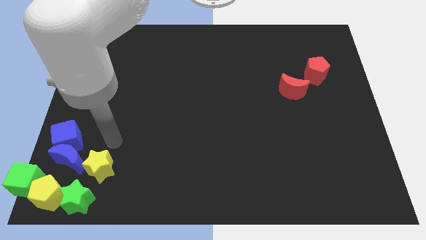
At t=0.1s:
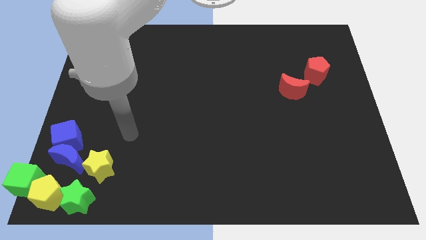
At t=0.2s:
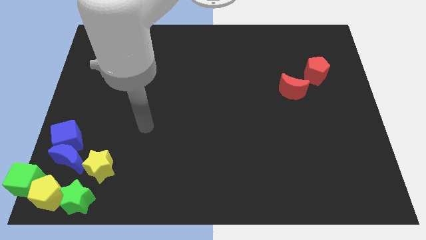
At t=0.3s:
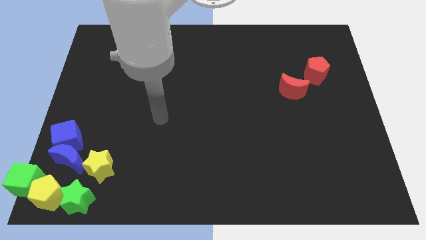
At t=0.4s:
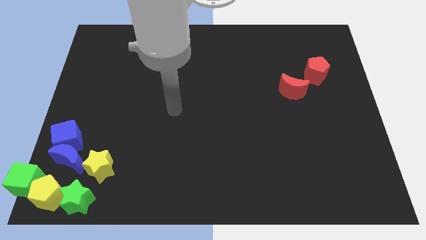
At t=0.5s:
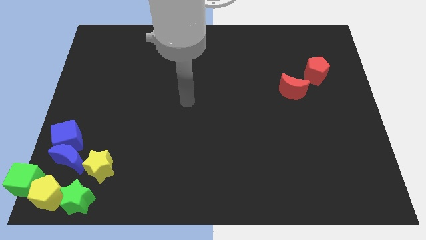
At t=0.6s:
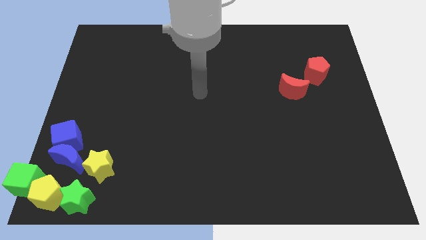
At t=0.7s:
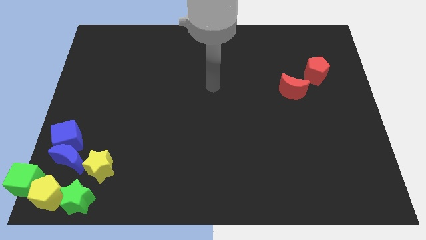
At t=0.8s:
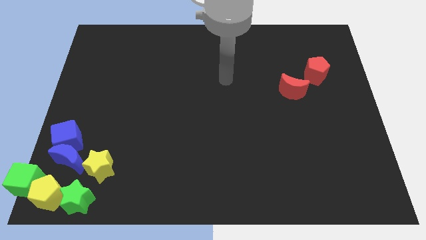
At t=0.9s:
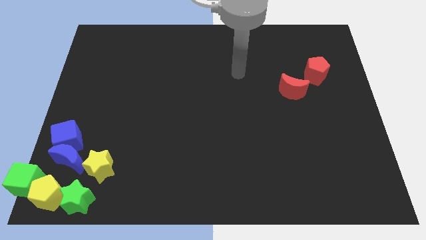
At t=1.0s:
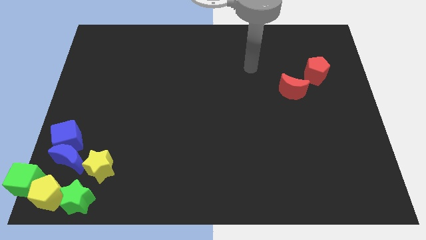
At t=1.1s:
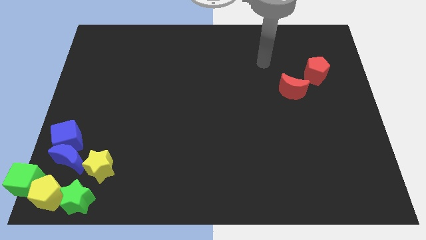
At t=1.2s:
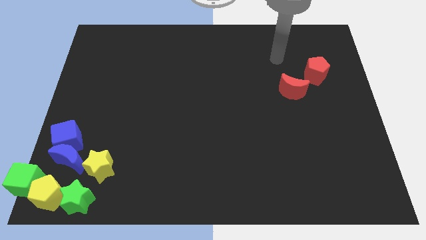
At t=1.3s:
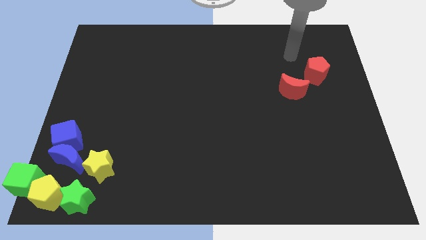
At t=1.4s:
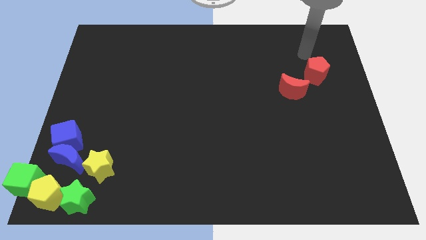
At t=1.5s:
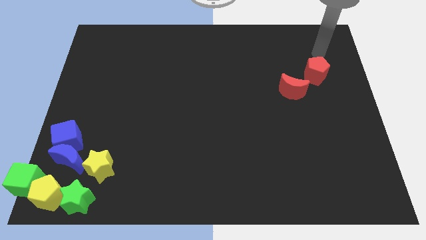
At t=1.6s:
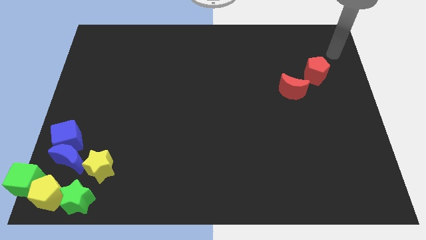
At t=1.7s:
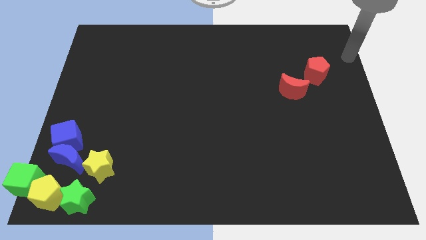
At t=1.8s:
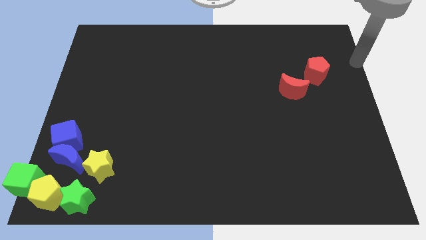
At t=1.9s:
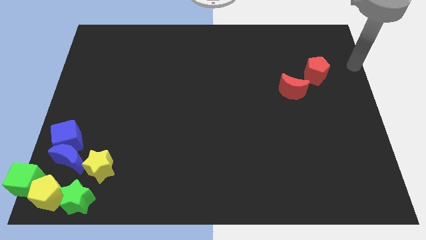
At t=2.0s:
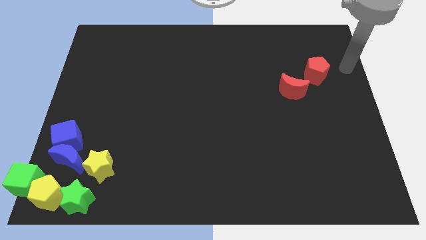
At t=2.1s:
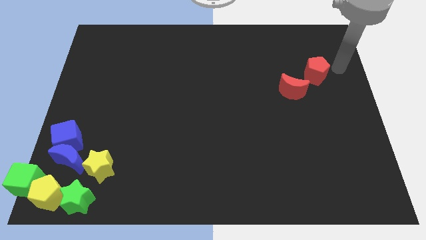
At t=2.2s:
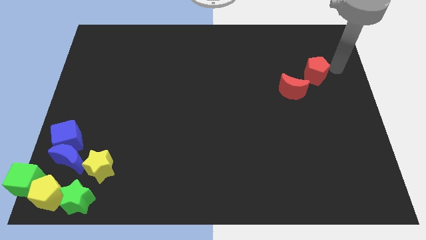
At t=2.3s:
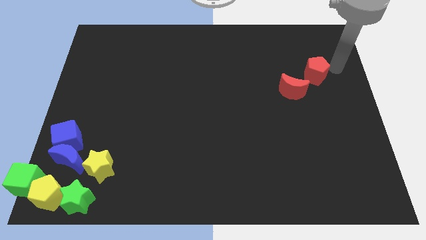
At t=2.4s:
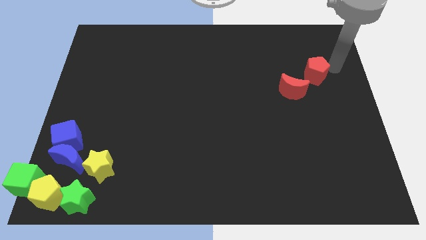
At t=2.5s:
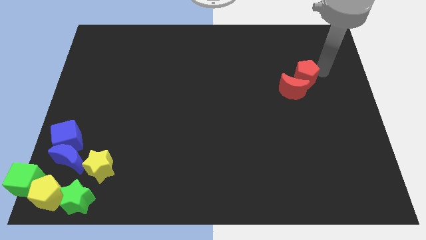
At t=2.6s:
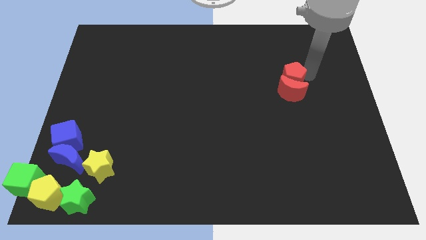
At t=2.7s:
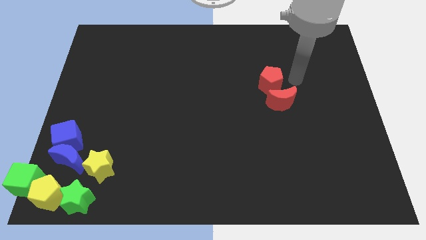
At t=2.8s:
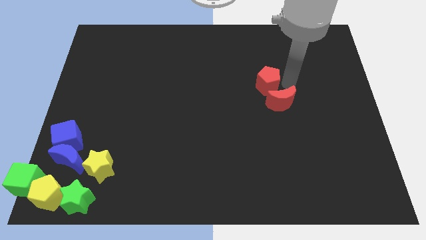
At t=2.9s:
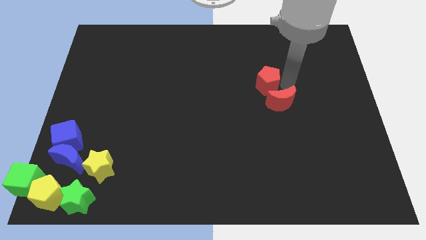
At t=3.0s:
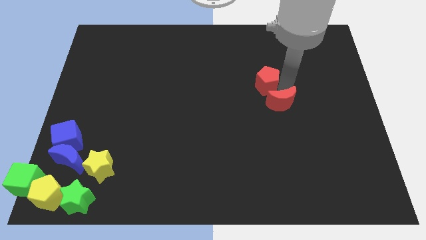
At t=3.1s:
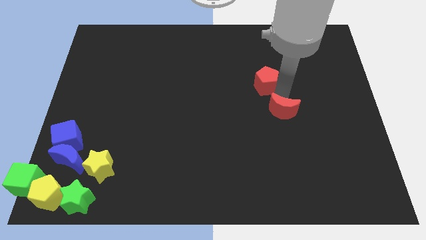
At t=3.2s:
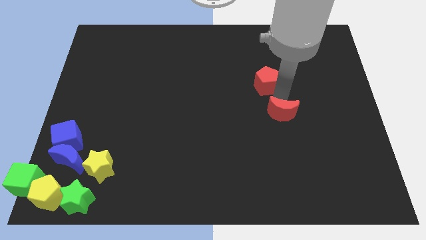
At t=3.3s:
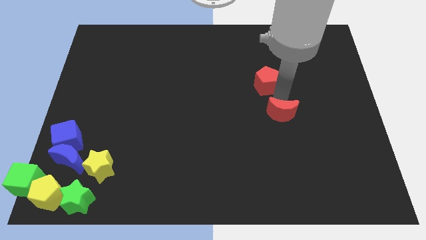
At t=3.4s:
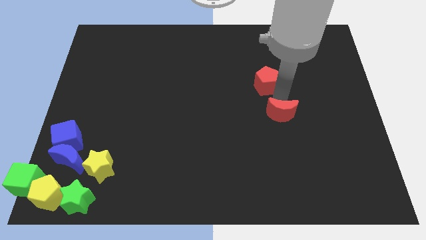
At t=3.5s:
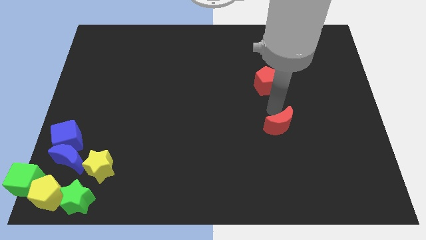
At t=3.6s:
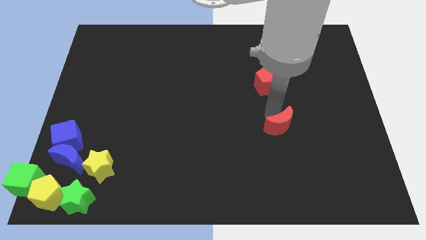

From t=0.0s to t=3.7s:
slide the red blocks vertical to each other

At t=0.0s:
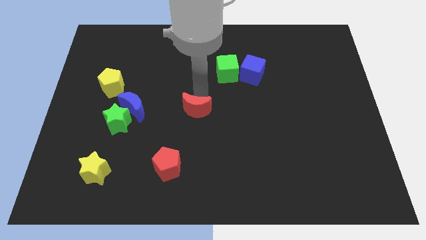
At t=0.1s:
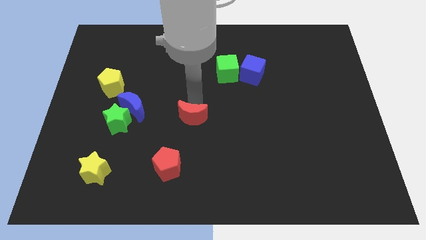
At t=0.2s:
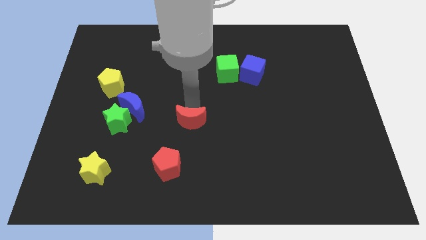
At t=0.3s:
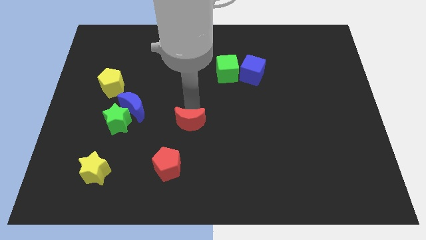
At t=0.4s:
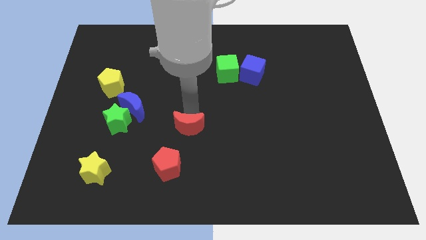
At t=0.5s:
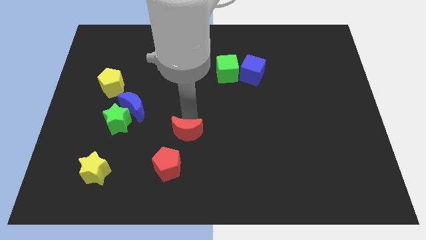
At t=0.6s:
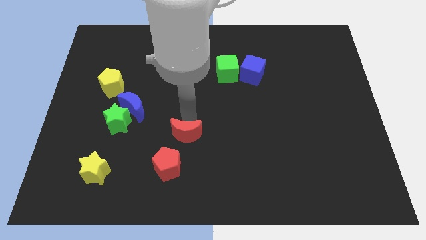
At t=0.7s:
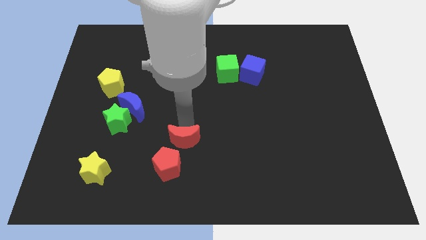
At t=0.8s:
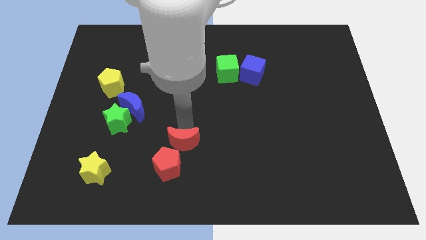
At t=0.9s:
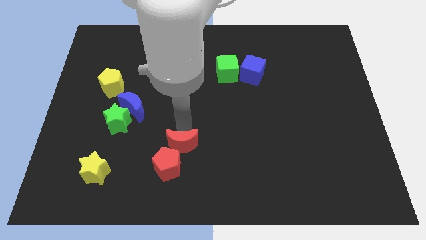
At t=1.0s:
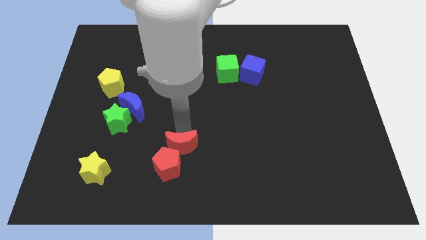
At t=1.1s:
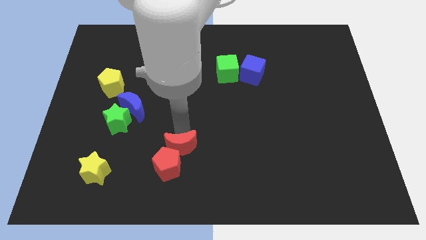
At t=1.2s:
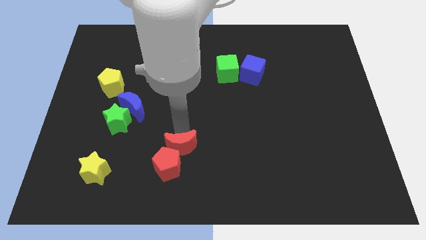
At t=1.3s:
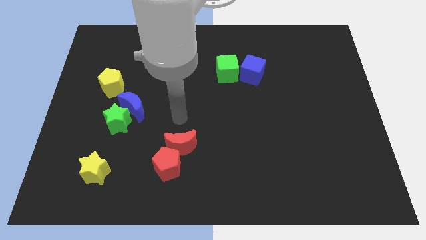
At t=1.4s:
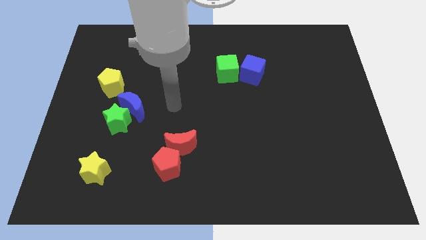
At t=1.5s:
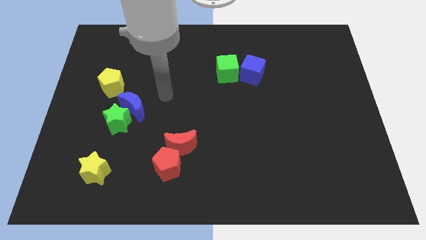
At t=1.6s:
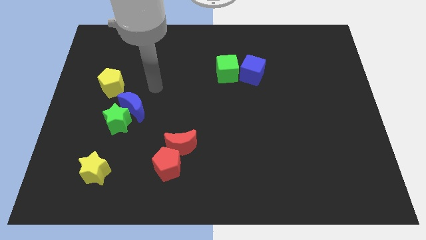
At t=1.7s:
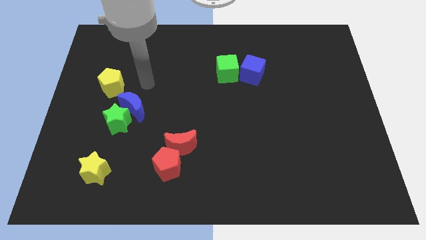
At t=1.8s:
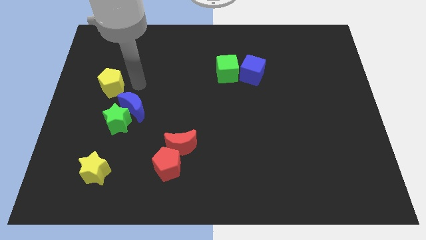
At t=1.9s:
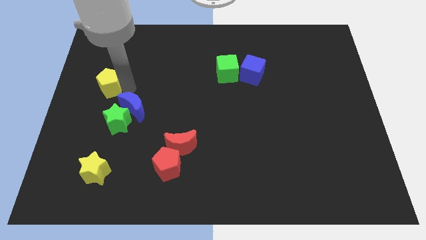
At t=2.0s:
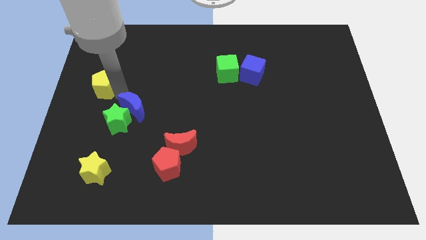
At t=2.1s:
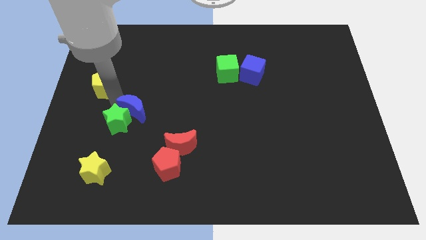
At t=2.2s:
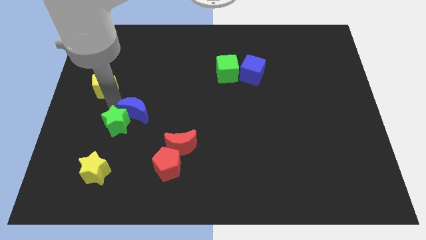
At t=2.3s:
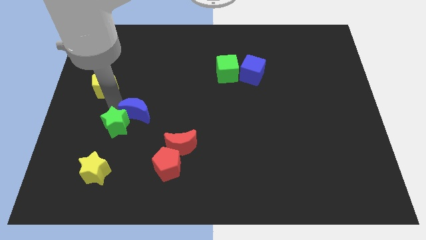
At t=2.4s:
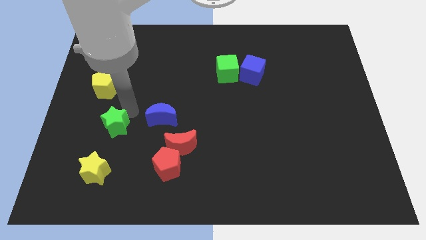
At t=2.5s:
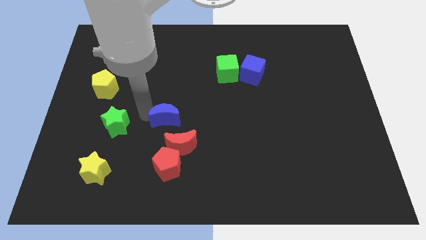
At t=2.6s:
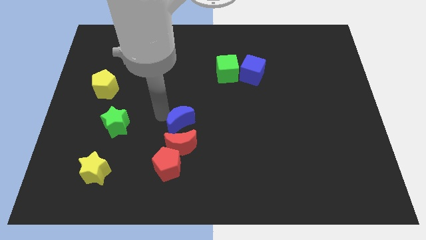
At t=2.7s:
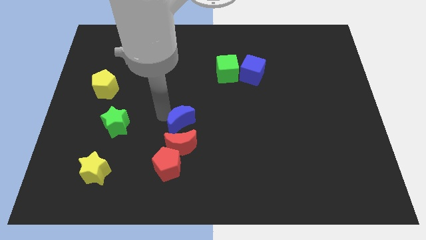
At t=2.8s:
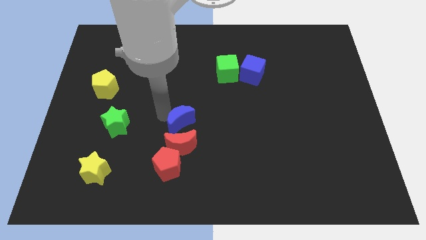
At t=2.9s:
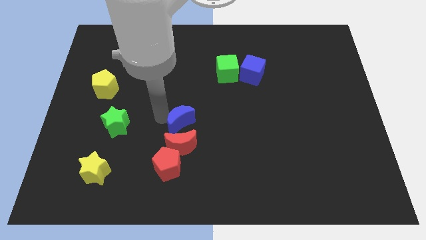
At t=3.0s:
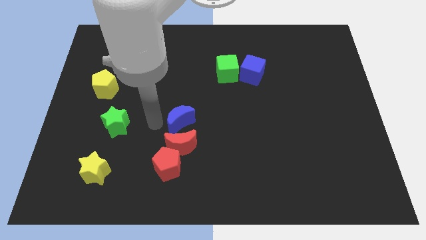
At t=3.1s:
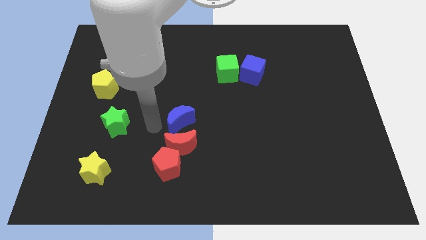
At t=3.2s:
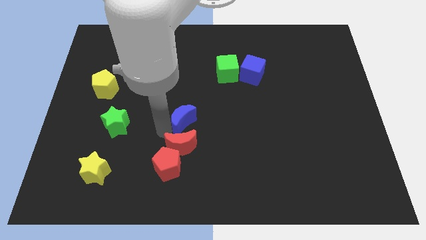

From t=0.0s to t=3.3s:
move the blue moon vertically above the red moon

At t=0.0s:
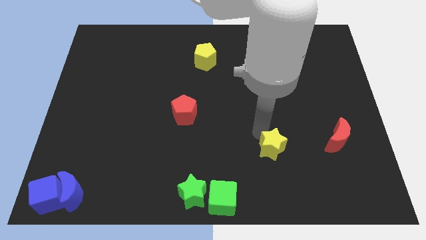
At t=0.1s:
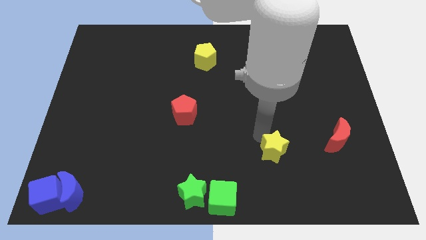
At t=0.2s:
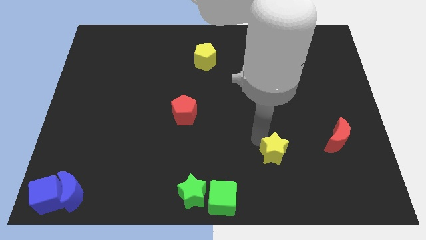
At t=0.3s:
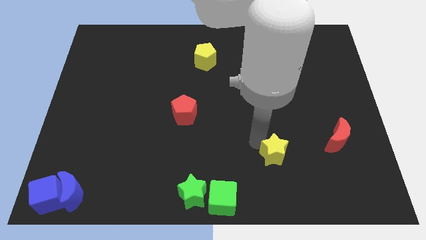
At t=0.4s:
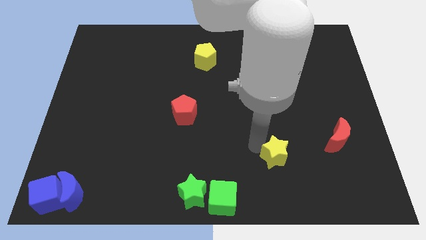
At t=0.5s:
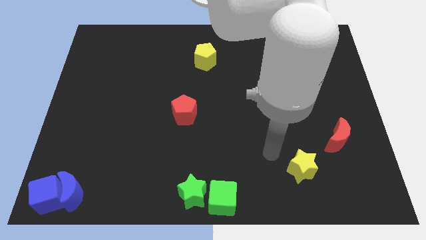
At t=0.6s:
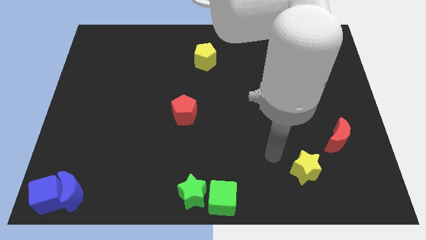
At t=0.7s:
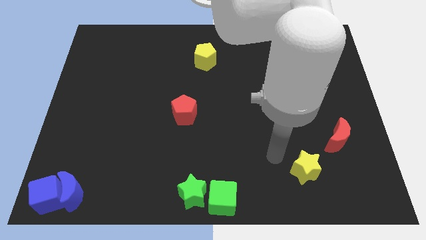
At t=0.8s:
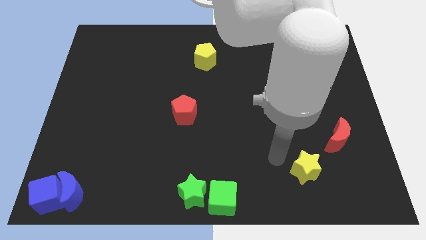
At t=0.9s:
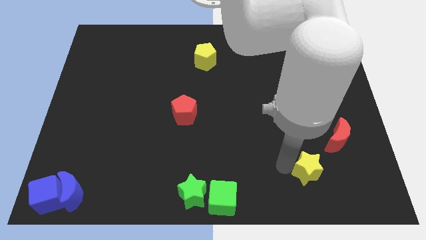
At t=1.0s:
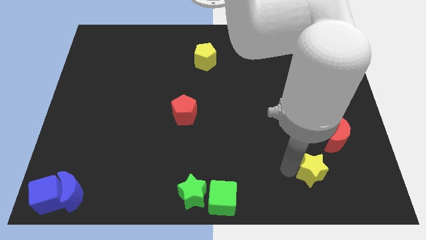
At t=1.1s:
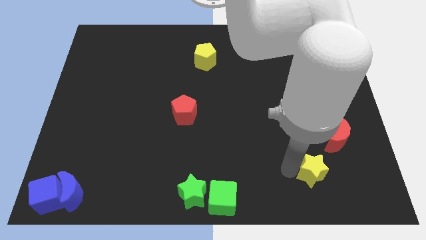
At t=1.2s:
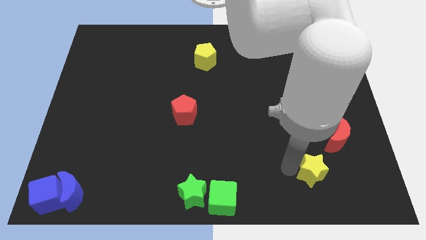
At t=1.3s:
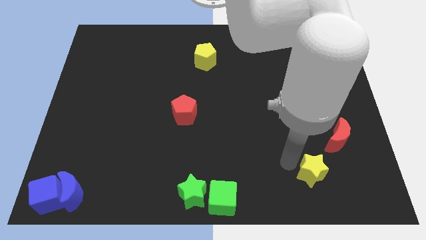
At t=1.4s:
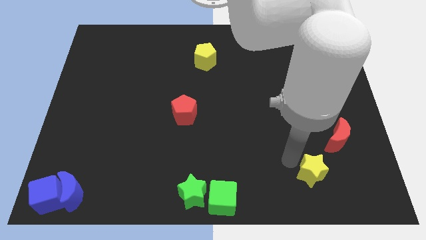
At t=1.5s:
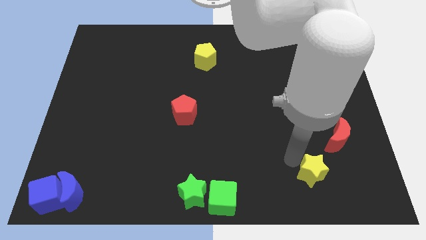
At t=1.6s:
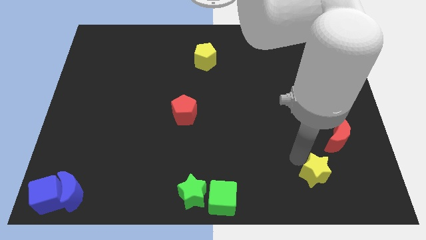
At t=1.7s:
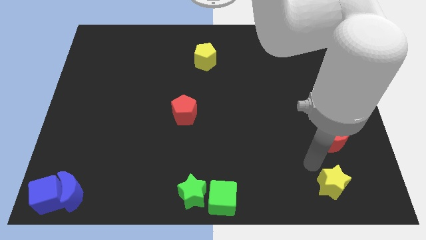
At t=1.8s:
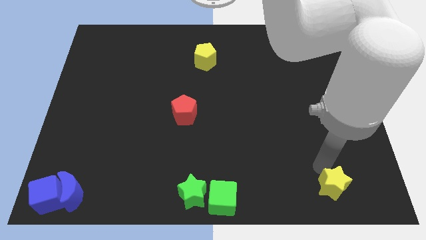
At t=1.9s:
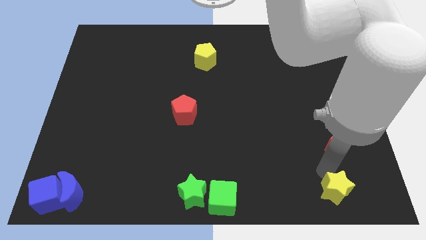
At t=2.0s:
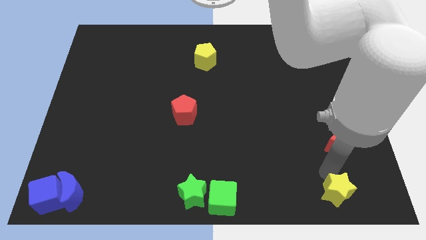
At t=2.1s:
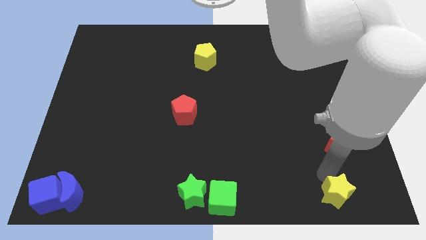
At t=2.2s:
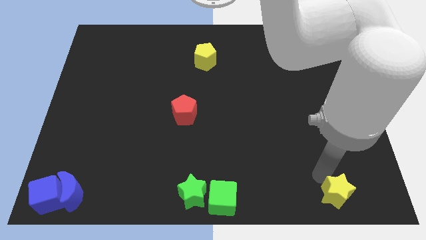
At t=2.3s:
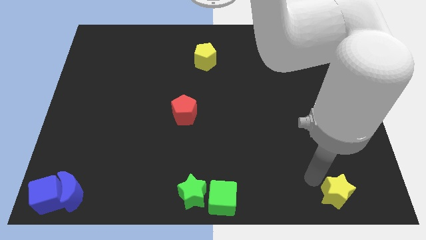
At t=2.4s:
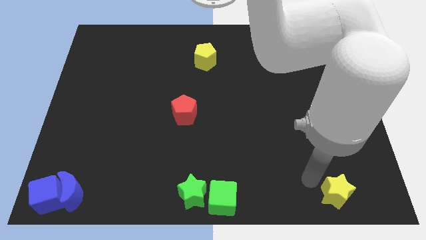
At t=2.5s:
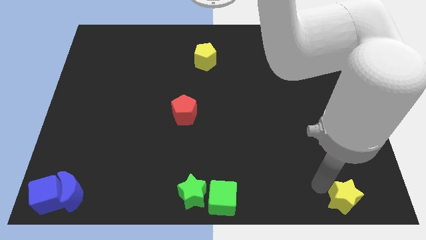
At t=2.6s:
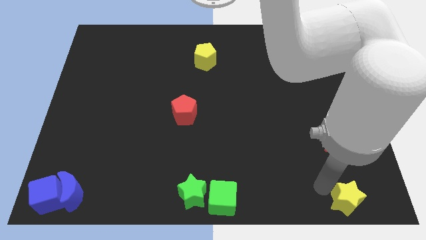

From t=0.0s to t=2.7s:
push yellow star below red crescent
